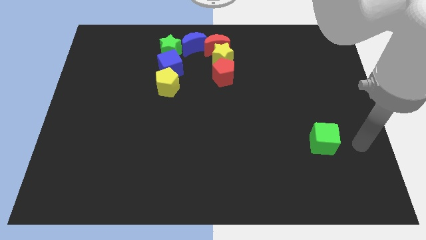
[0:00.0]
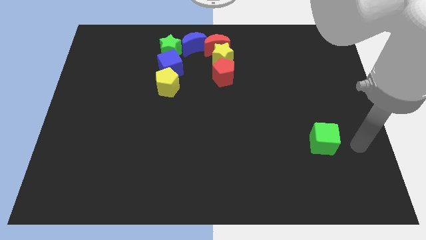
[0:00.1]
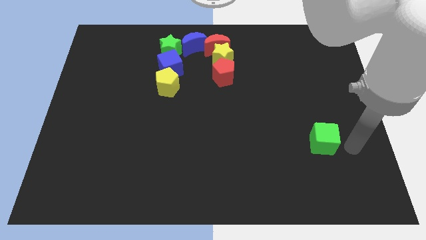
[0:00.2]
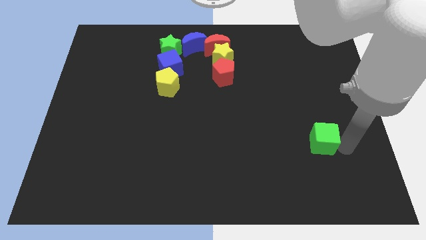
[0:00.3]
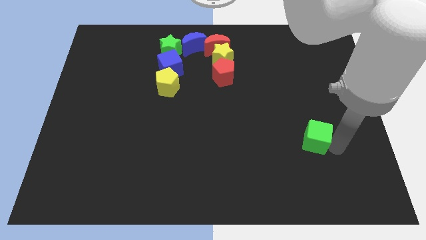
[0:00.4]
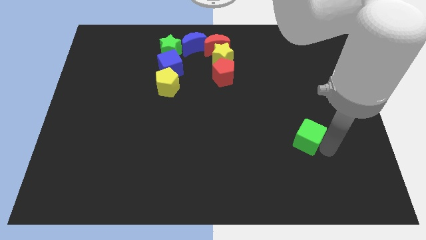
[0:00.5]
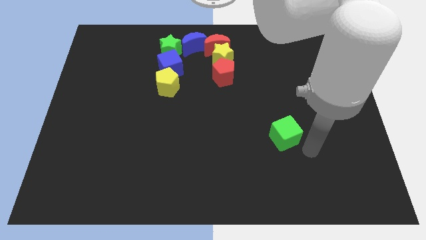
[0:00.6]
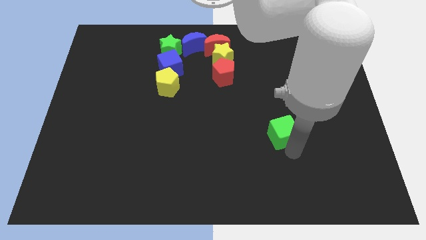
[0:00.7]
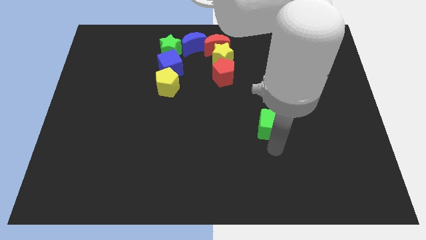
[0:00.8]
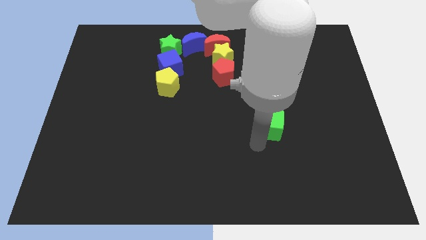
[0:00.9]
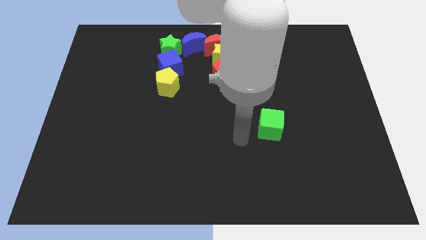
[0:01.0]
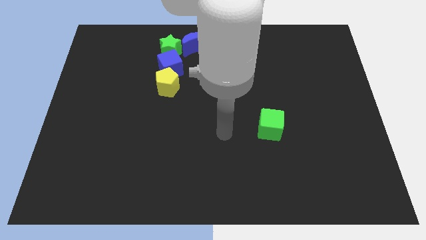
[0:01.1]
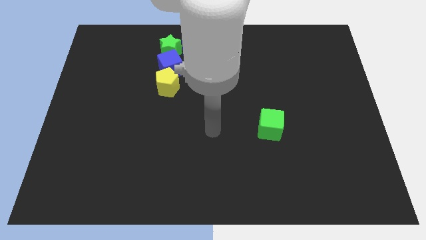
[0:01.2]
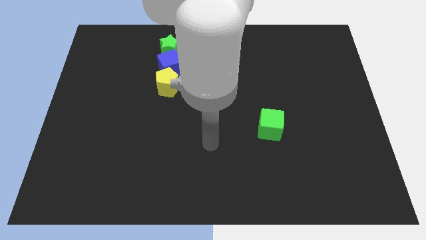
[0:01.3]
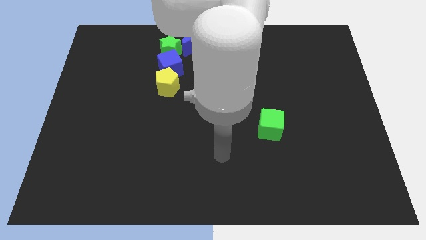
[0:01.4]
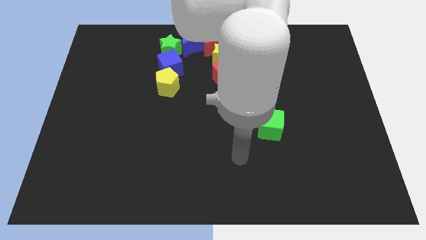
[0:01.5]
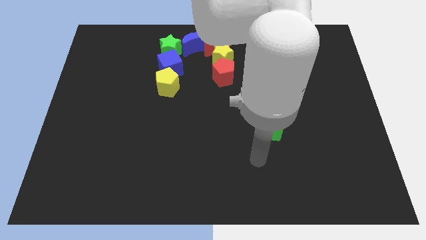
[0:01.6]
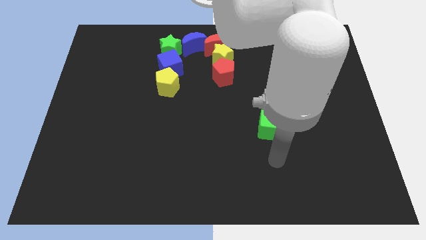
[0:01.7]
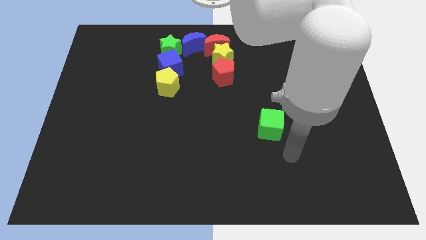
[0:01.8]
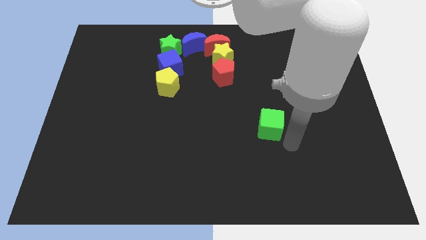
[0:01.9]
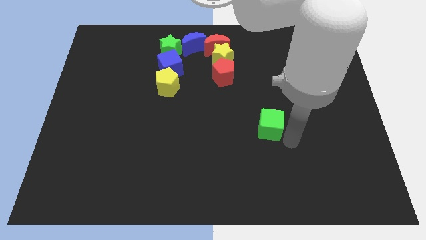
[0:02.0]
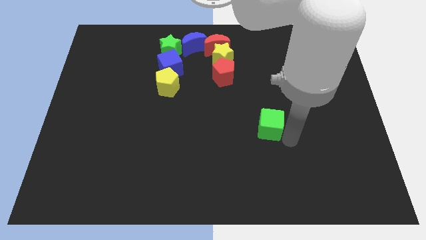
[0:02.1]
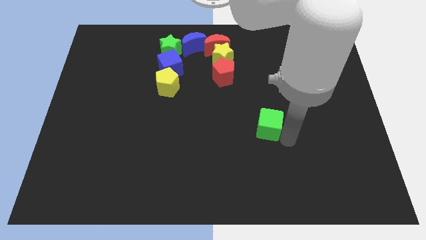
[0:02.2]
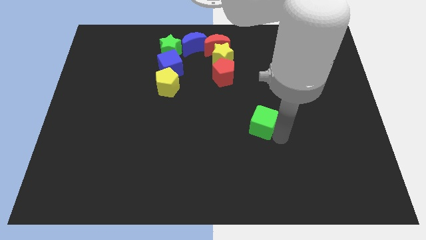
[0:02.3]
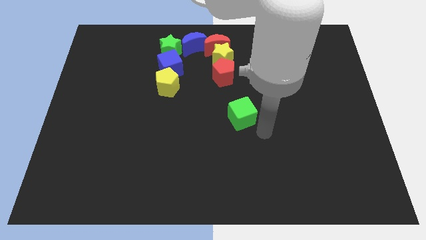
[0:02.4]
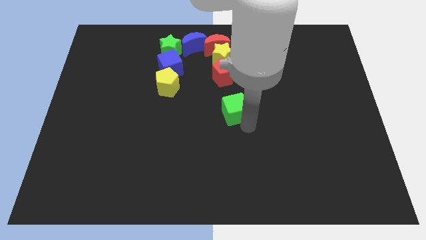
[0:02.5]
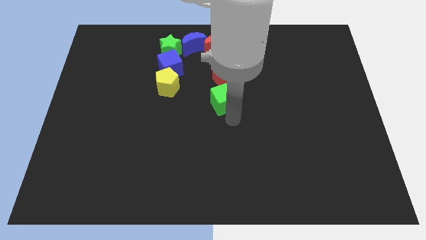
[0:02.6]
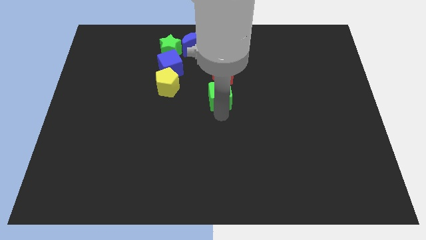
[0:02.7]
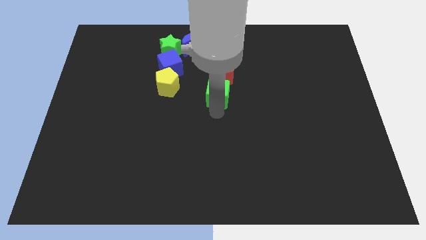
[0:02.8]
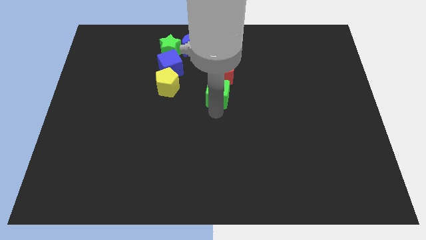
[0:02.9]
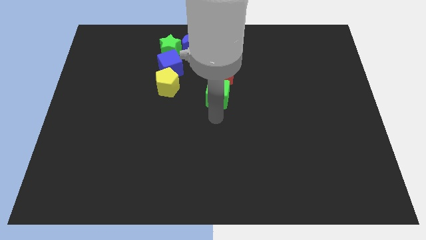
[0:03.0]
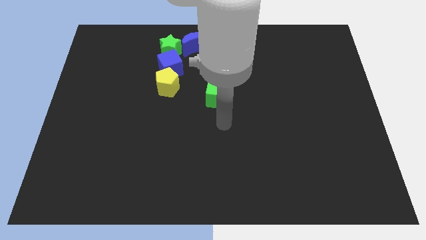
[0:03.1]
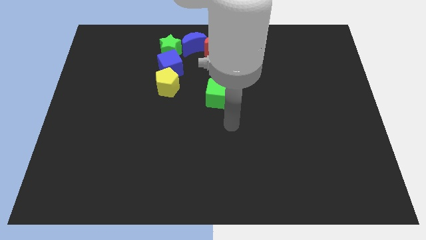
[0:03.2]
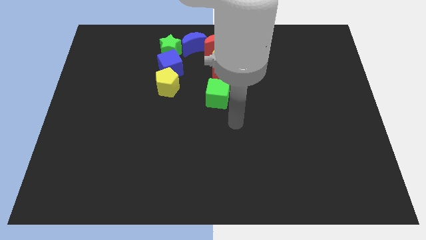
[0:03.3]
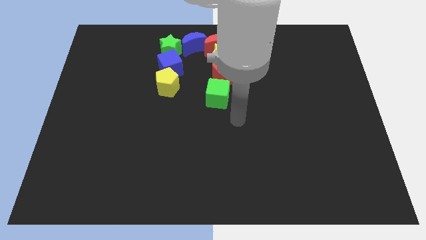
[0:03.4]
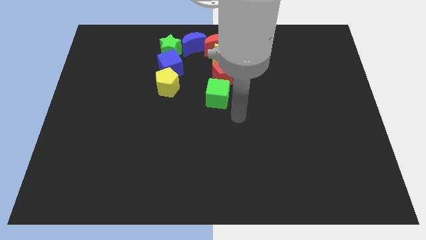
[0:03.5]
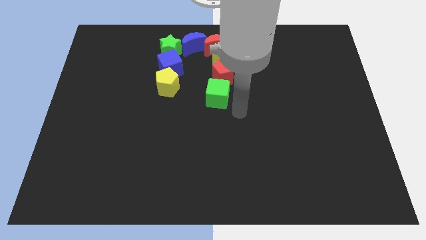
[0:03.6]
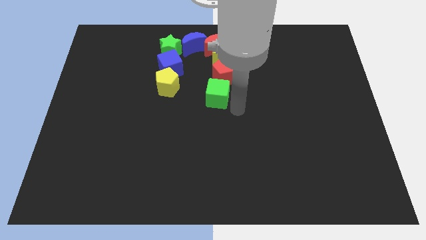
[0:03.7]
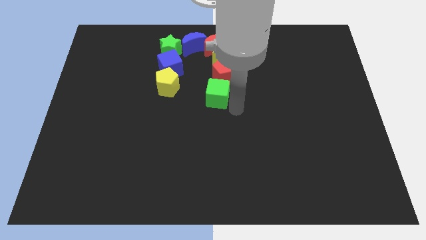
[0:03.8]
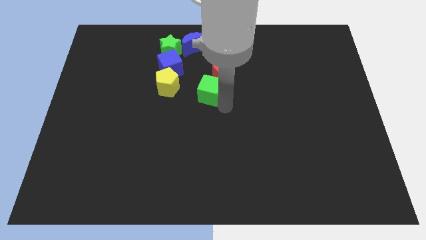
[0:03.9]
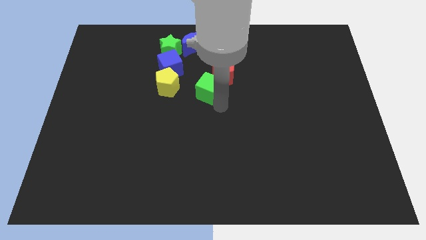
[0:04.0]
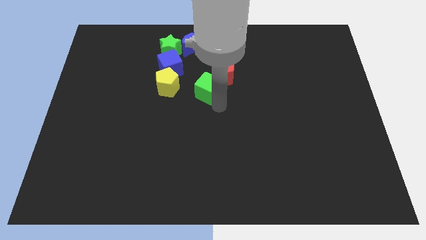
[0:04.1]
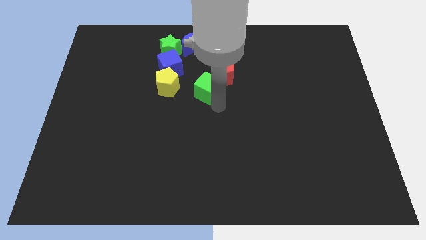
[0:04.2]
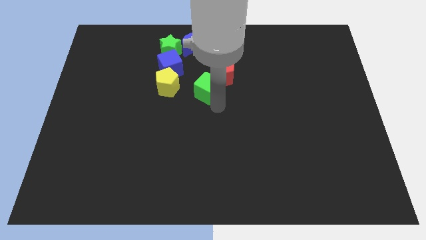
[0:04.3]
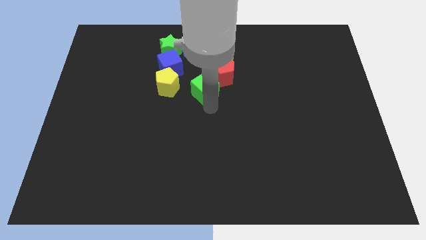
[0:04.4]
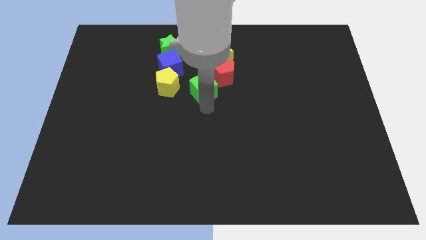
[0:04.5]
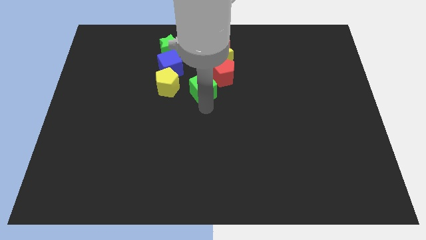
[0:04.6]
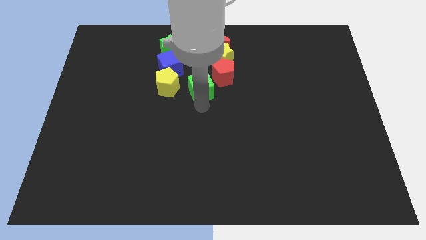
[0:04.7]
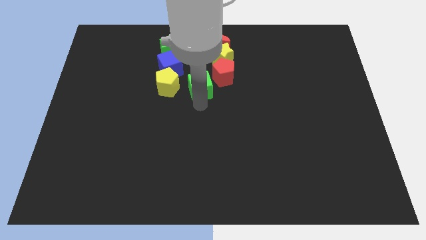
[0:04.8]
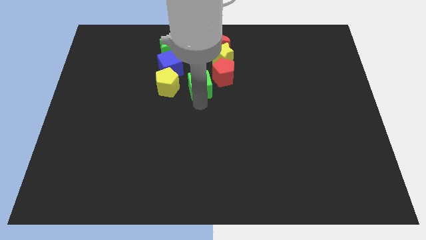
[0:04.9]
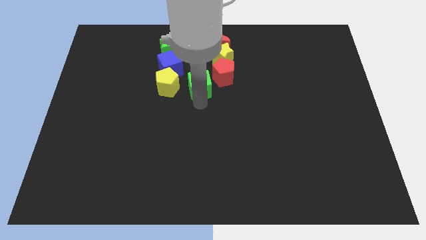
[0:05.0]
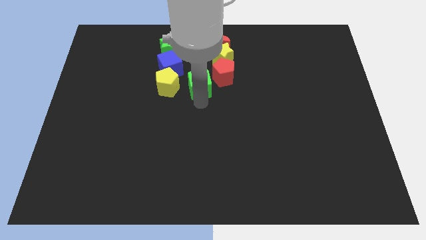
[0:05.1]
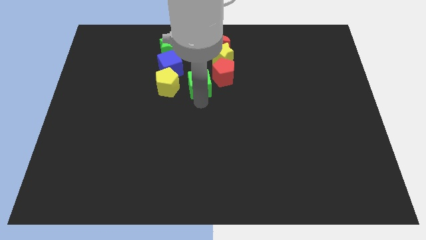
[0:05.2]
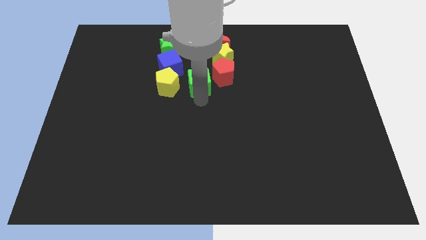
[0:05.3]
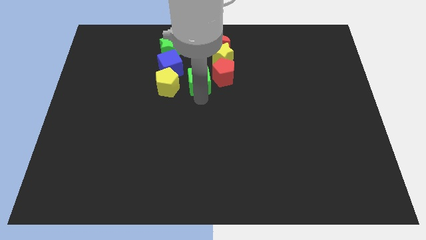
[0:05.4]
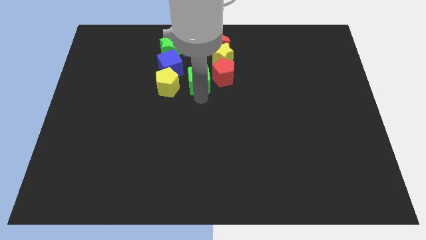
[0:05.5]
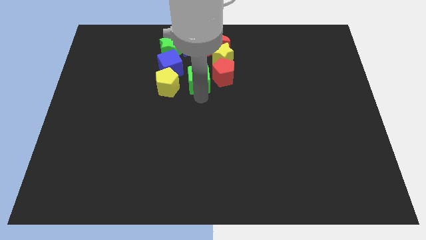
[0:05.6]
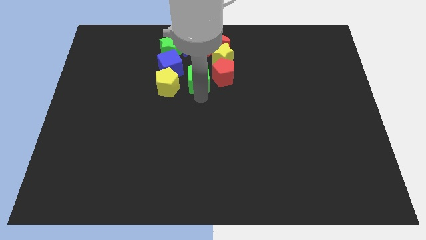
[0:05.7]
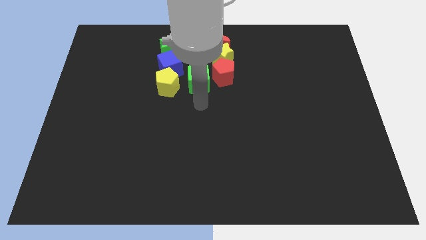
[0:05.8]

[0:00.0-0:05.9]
place the green cube in between yellow pentagon and red pentagon

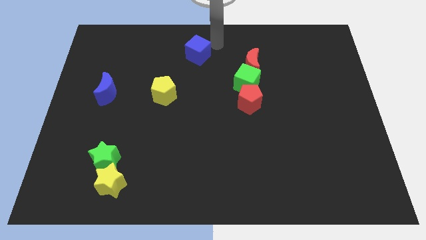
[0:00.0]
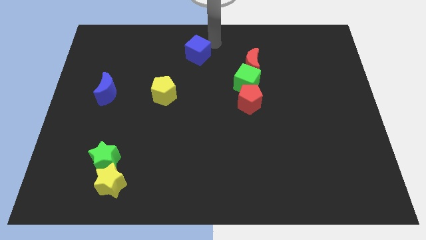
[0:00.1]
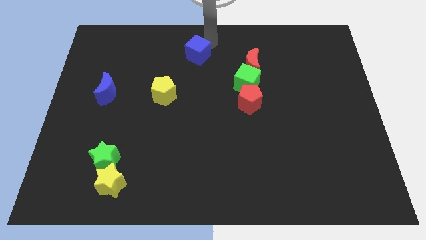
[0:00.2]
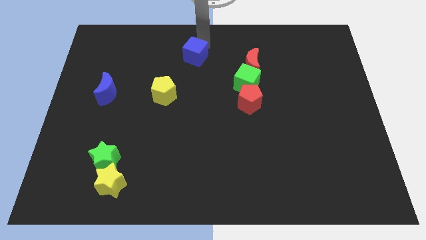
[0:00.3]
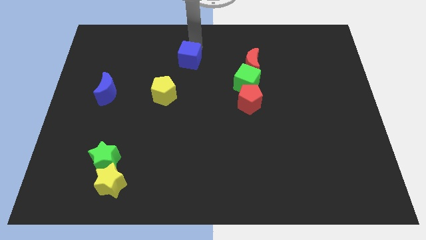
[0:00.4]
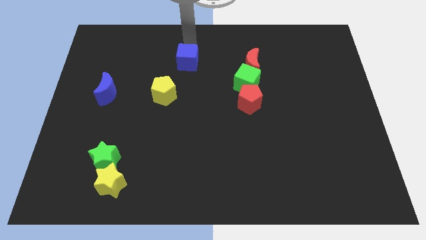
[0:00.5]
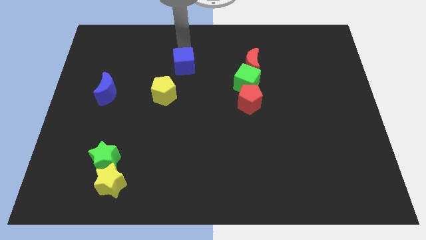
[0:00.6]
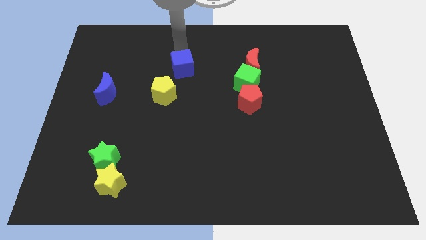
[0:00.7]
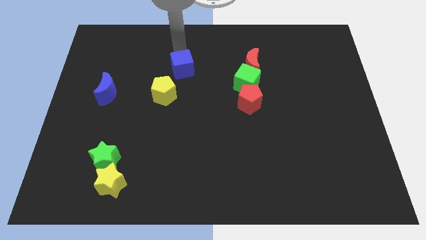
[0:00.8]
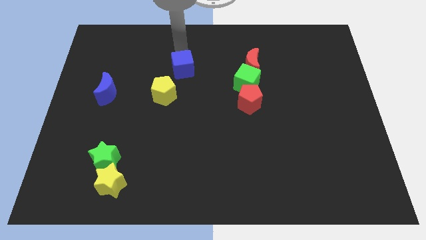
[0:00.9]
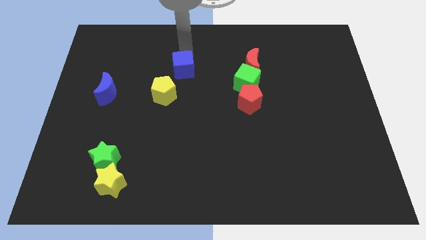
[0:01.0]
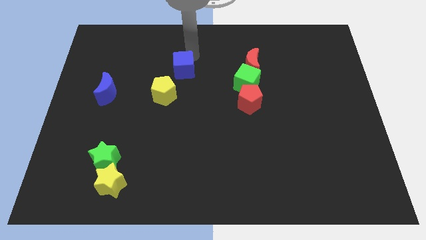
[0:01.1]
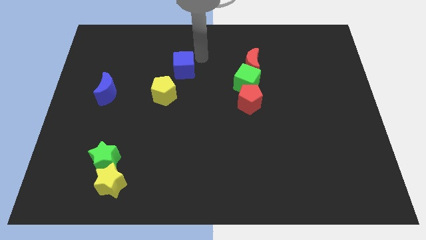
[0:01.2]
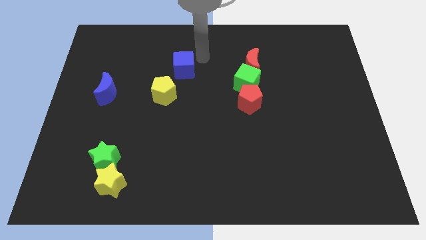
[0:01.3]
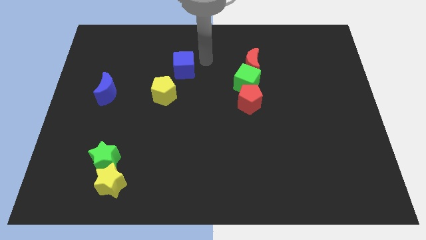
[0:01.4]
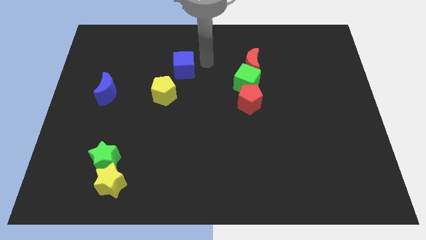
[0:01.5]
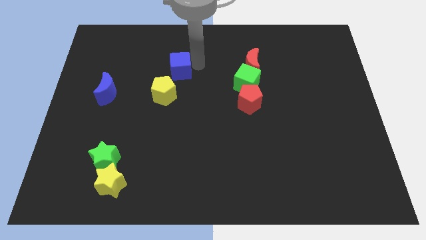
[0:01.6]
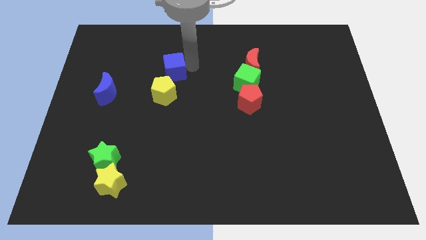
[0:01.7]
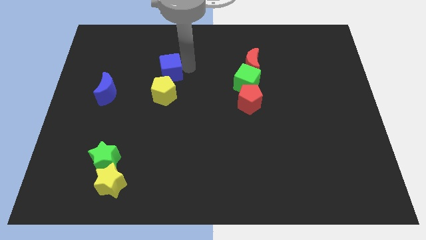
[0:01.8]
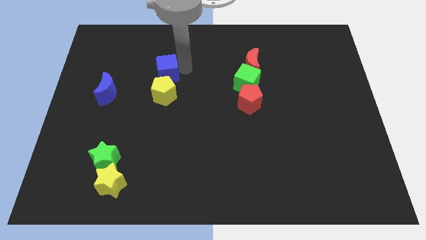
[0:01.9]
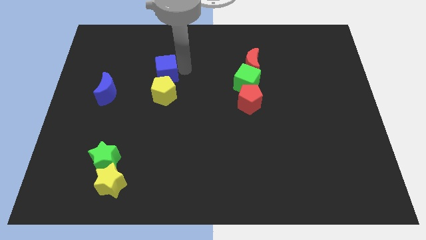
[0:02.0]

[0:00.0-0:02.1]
place blue cube on top of yellow pentagon

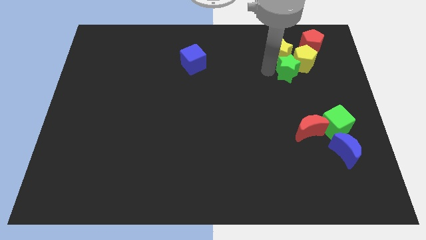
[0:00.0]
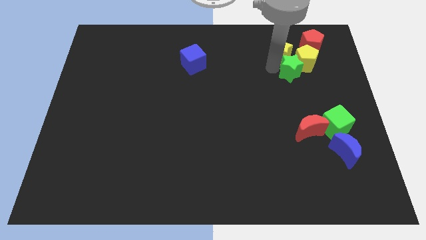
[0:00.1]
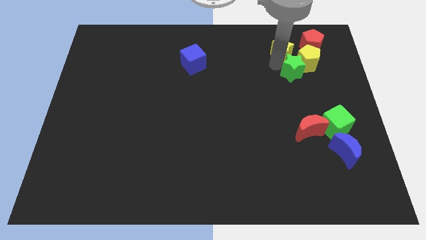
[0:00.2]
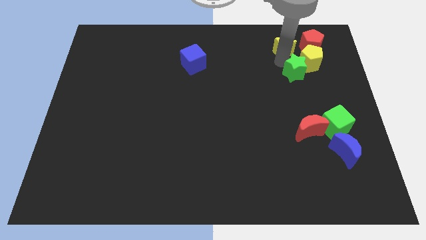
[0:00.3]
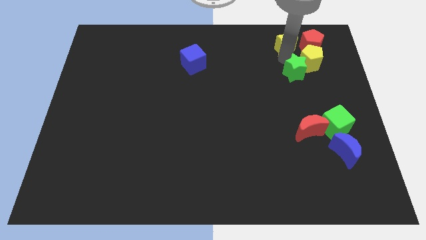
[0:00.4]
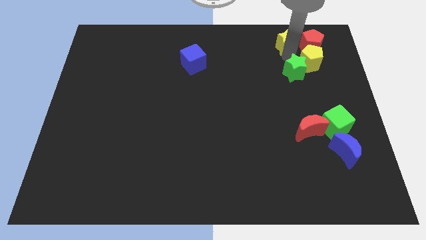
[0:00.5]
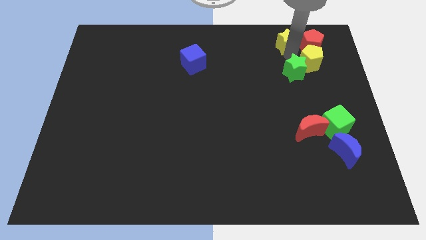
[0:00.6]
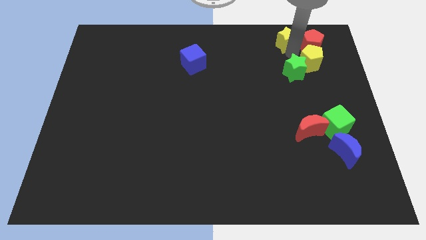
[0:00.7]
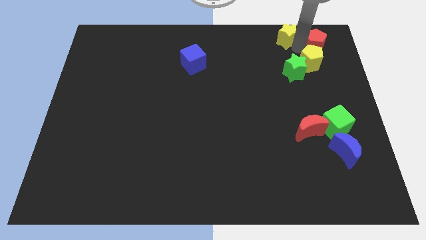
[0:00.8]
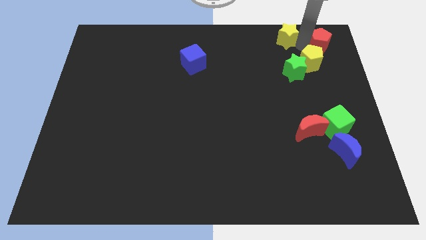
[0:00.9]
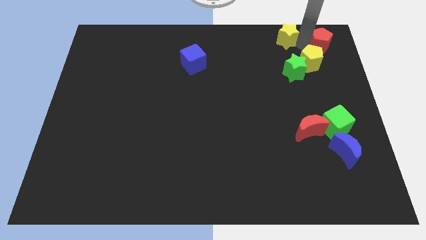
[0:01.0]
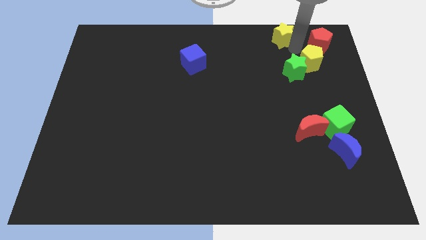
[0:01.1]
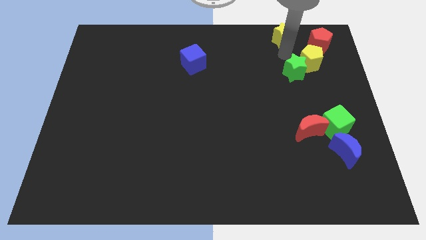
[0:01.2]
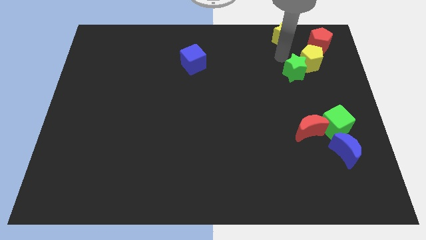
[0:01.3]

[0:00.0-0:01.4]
seperate yellow and green stars
